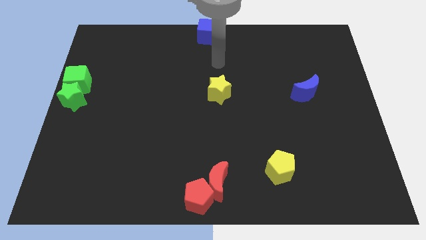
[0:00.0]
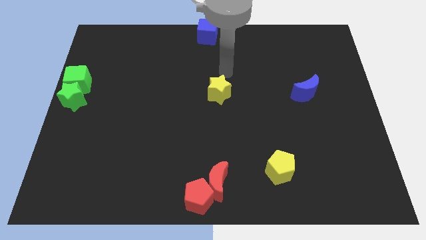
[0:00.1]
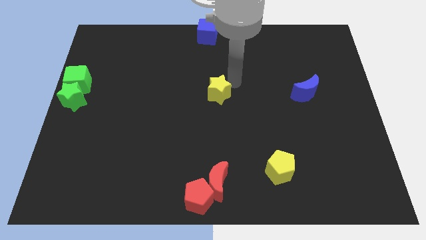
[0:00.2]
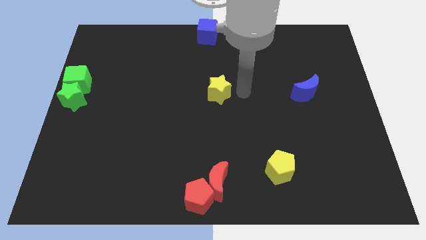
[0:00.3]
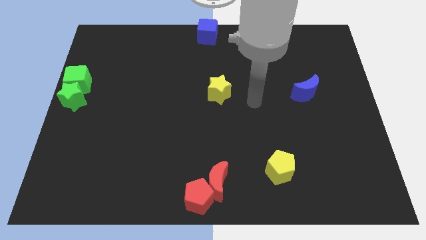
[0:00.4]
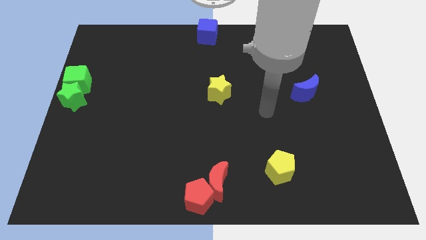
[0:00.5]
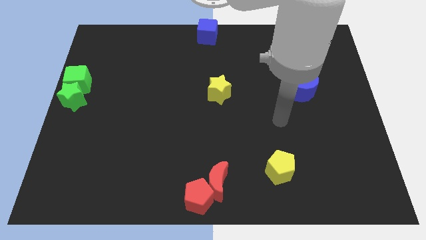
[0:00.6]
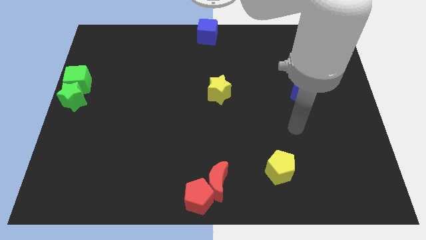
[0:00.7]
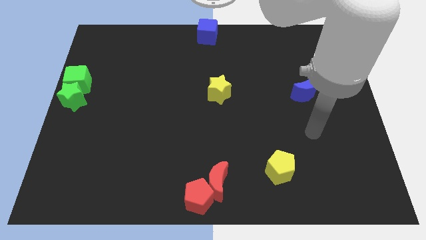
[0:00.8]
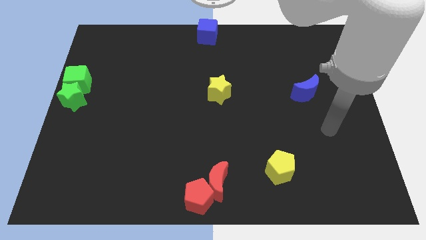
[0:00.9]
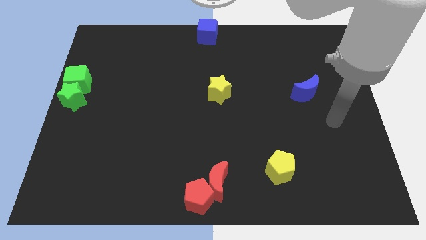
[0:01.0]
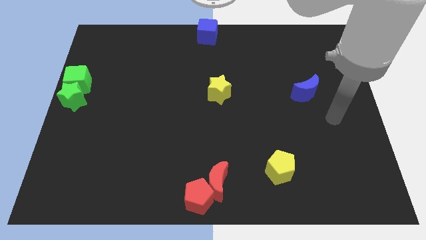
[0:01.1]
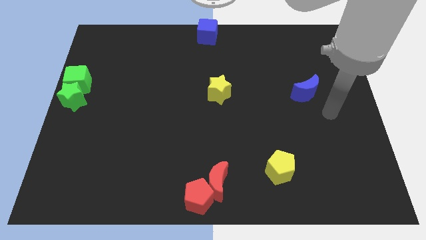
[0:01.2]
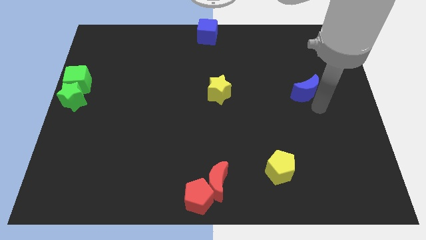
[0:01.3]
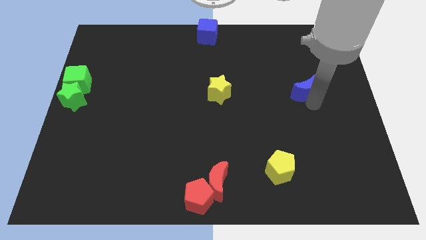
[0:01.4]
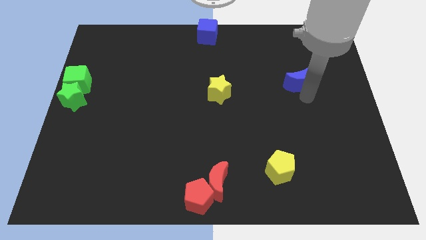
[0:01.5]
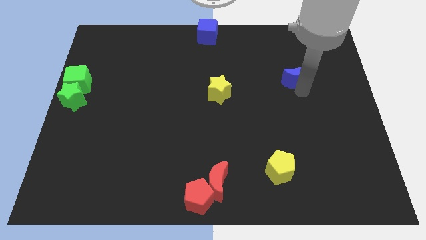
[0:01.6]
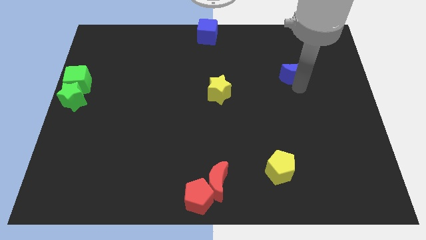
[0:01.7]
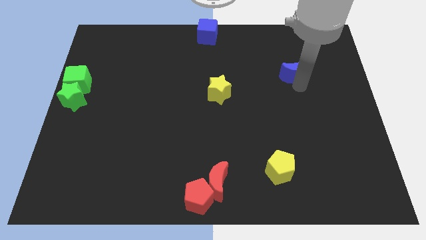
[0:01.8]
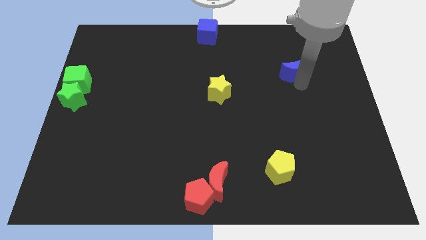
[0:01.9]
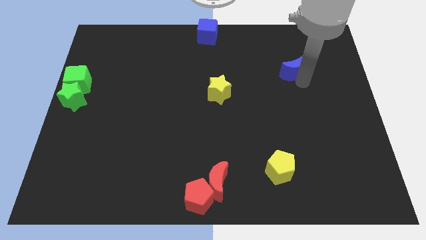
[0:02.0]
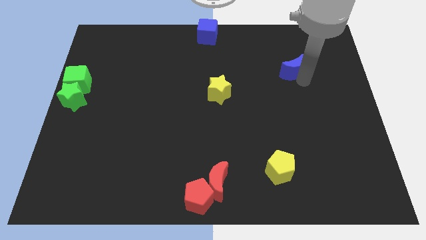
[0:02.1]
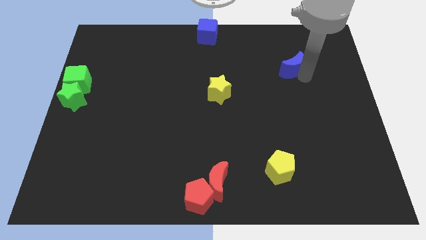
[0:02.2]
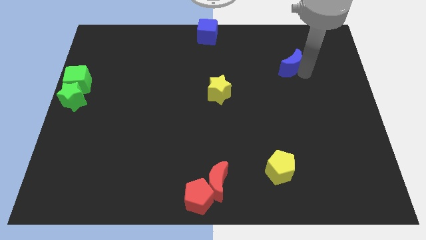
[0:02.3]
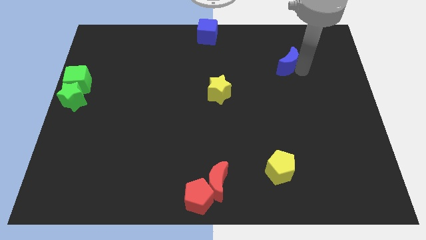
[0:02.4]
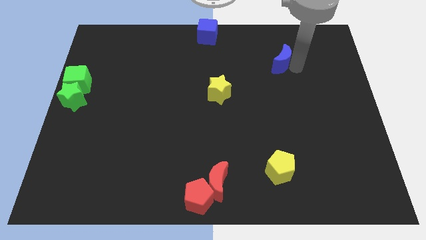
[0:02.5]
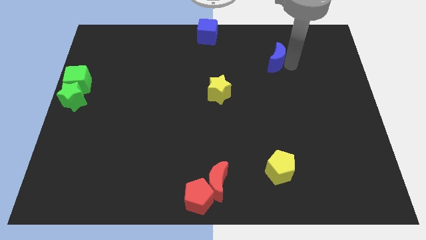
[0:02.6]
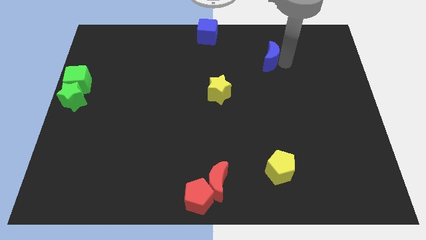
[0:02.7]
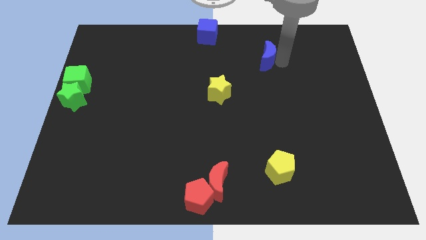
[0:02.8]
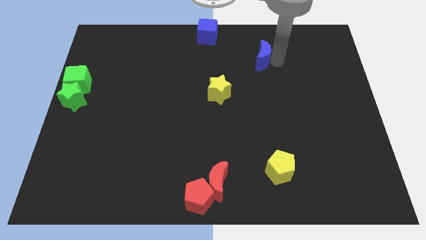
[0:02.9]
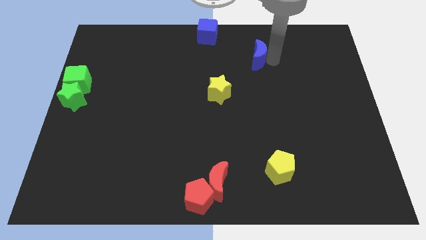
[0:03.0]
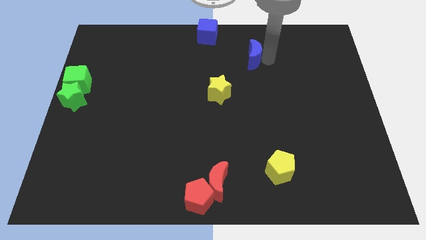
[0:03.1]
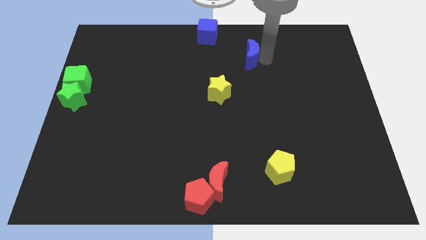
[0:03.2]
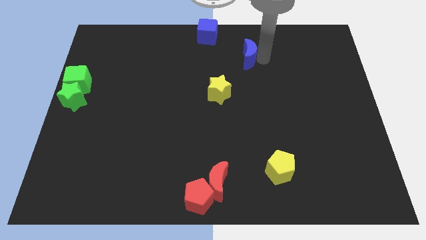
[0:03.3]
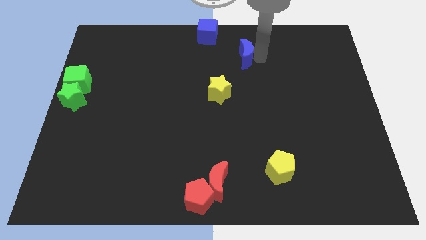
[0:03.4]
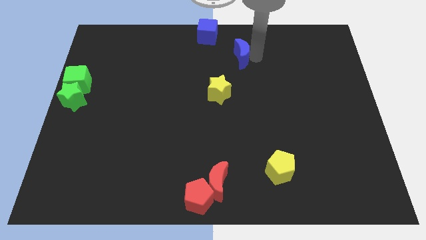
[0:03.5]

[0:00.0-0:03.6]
slide the blue moon diagonally to the top right of the yellow star

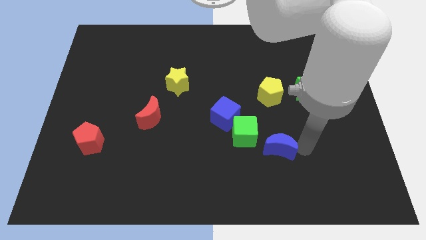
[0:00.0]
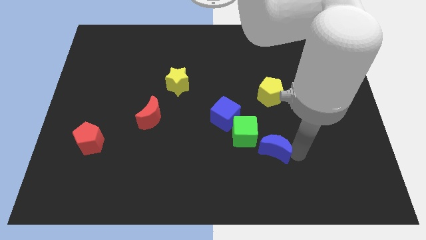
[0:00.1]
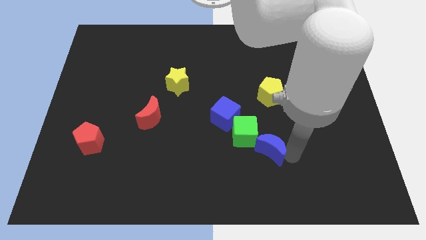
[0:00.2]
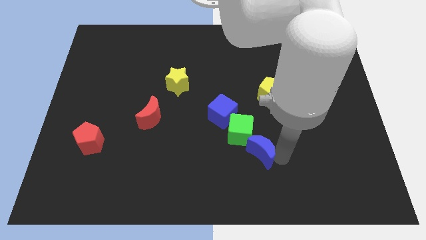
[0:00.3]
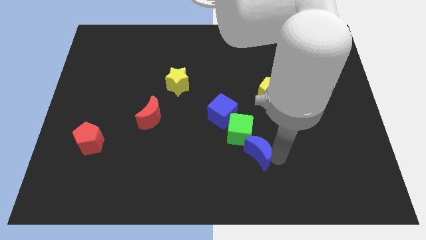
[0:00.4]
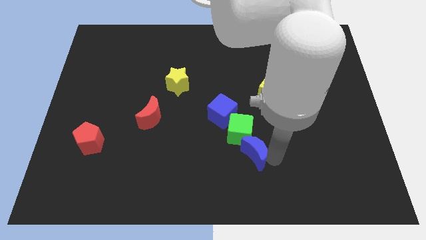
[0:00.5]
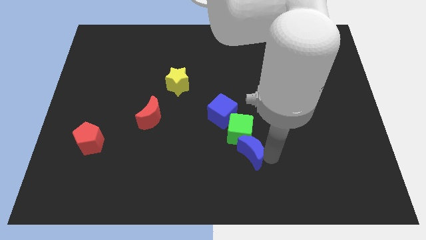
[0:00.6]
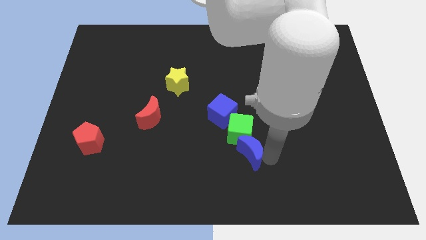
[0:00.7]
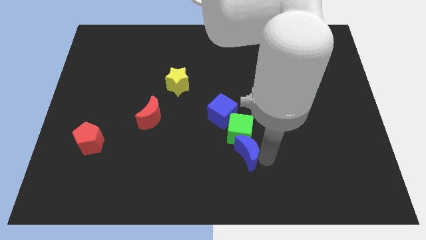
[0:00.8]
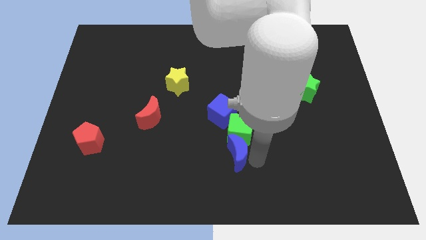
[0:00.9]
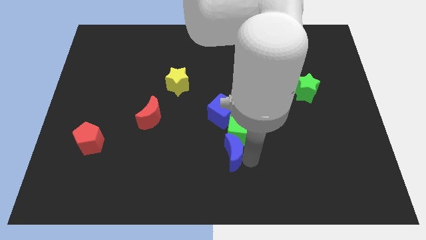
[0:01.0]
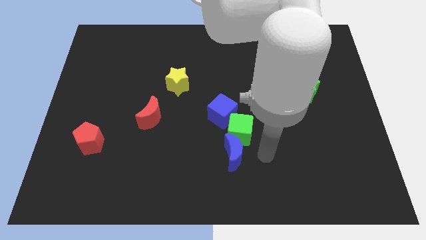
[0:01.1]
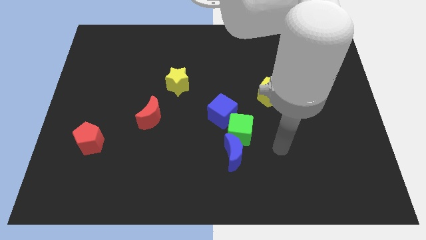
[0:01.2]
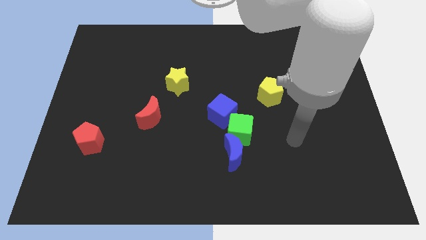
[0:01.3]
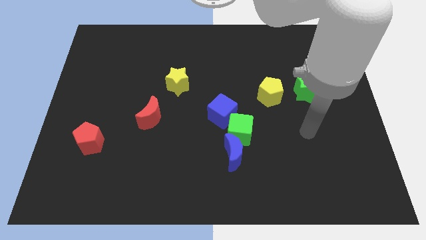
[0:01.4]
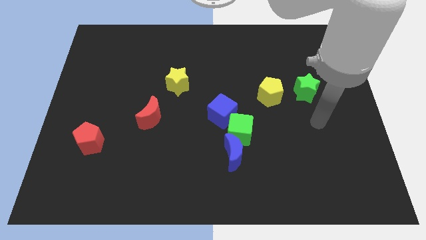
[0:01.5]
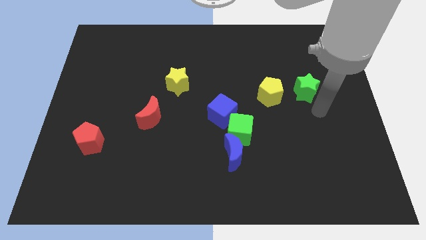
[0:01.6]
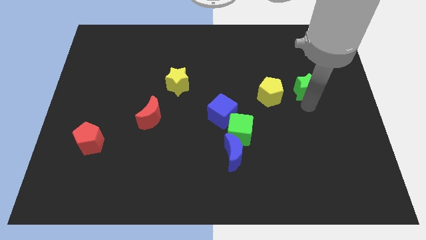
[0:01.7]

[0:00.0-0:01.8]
drag the blue moon slightly to the left

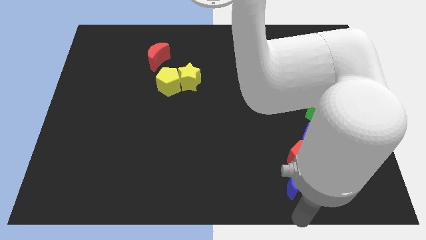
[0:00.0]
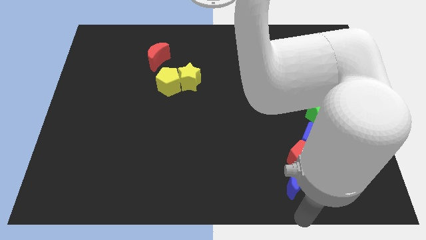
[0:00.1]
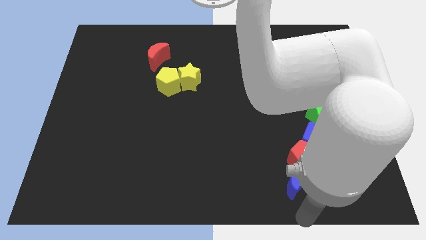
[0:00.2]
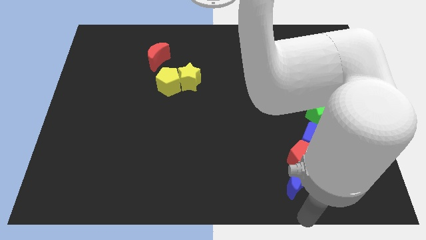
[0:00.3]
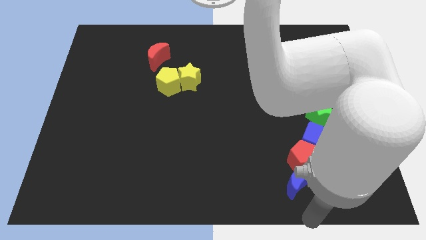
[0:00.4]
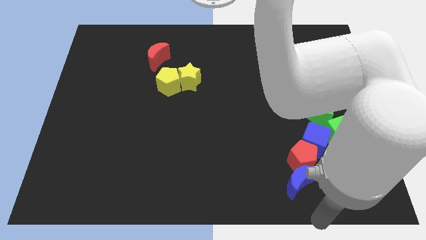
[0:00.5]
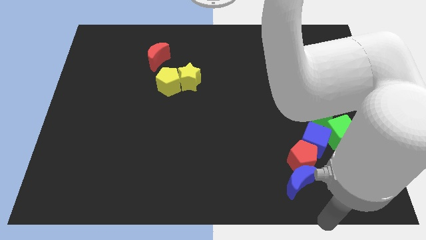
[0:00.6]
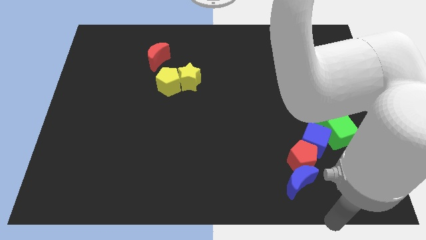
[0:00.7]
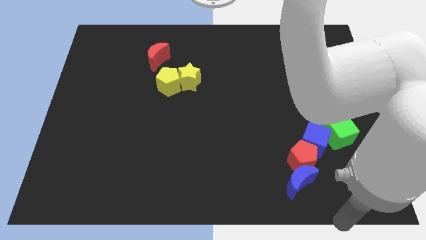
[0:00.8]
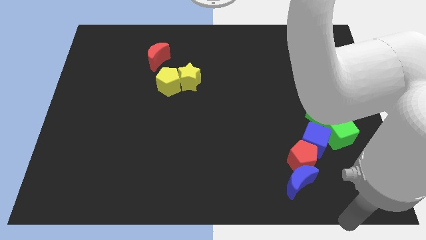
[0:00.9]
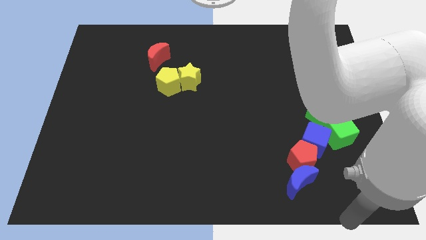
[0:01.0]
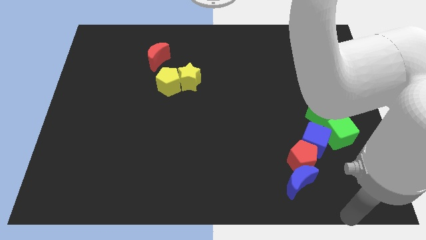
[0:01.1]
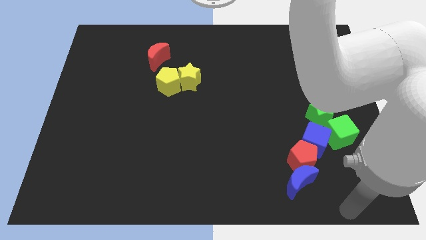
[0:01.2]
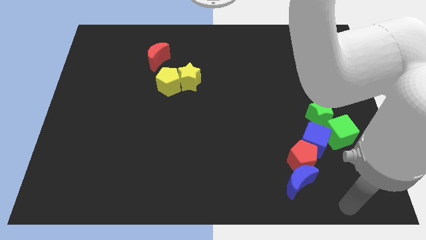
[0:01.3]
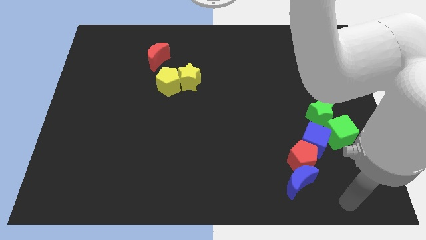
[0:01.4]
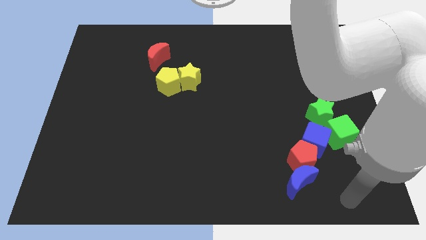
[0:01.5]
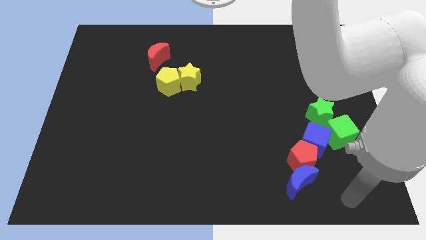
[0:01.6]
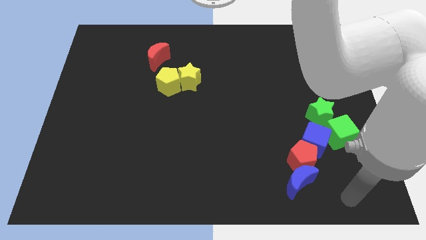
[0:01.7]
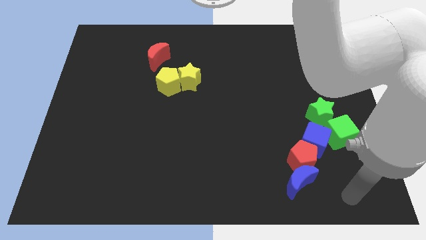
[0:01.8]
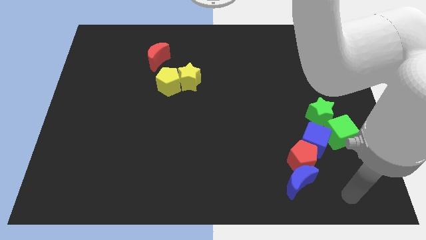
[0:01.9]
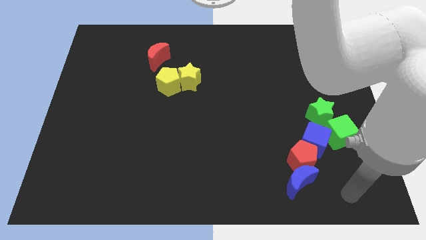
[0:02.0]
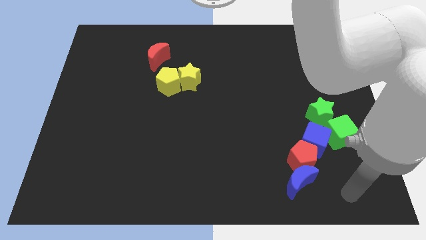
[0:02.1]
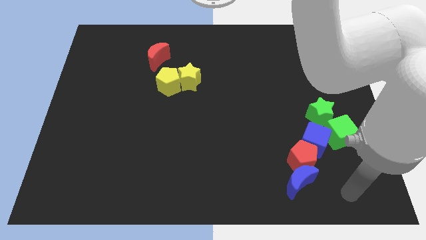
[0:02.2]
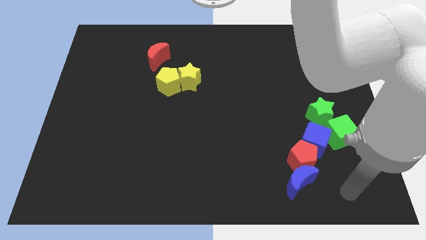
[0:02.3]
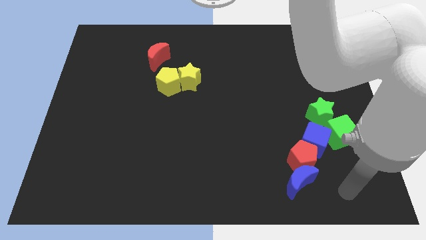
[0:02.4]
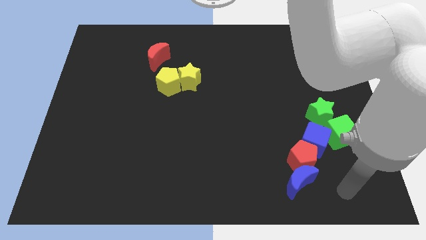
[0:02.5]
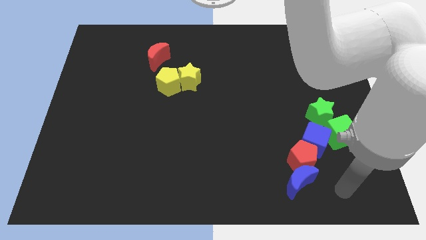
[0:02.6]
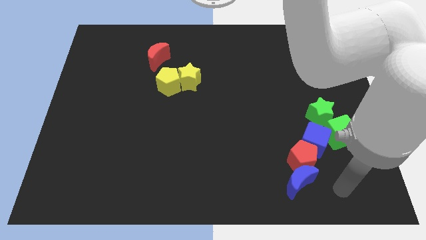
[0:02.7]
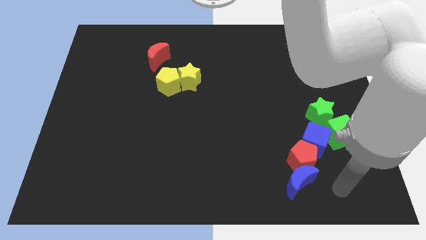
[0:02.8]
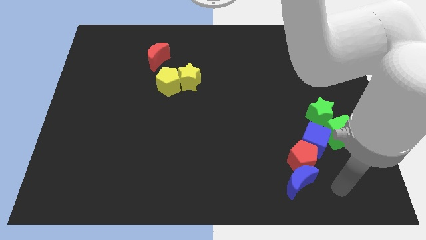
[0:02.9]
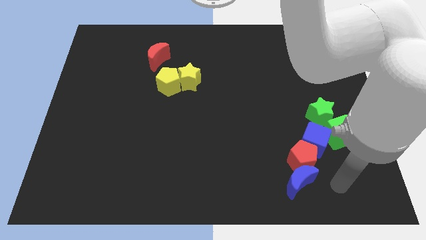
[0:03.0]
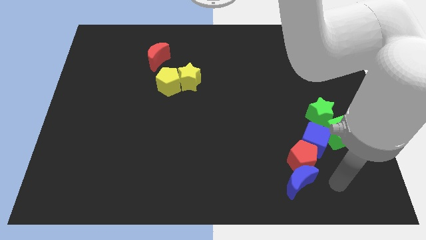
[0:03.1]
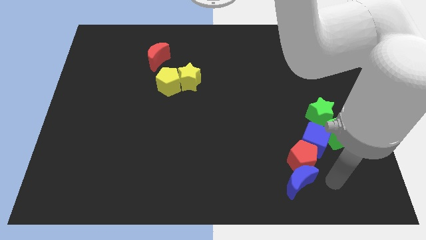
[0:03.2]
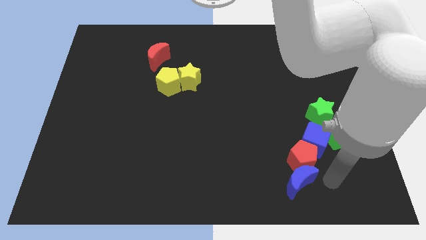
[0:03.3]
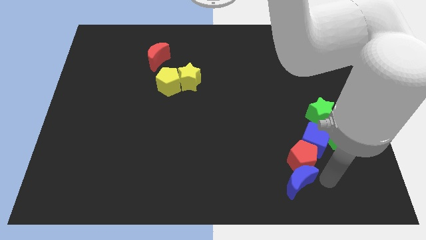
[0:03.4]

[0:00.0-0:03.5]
point your arm at the right of the blue crescent

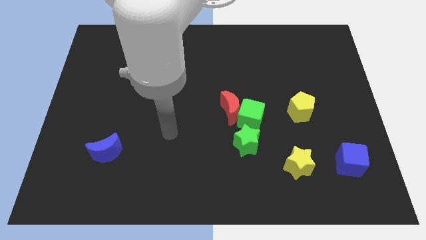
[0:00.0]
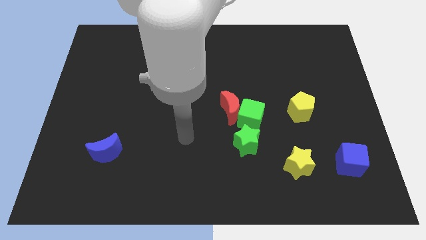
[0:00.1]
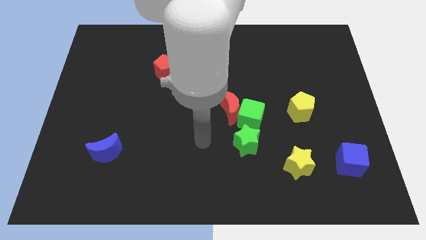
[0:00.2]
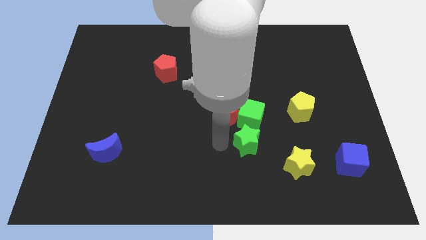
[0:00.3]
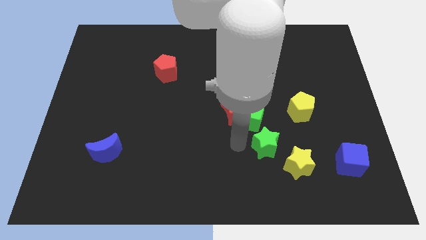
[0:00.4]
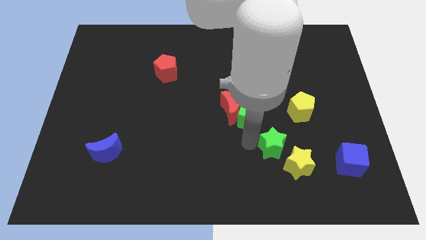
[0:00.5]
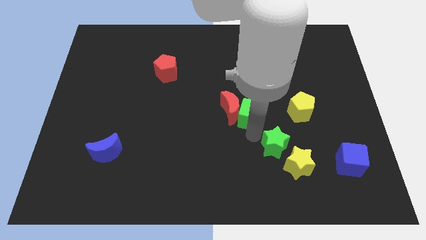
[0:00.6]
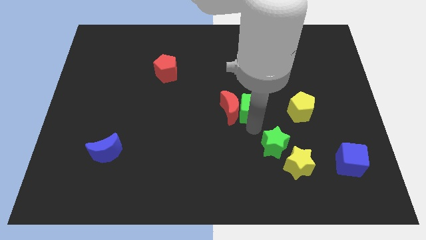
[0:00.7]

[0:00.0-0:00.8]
push the green star to the top left of the yellow star
